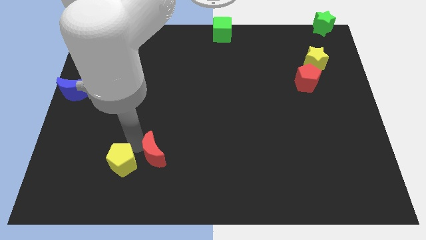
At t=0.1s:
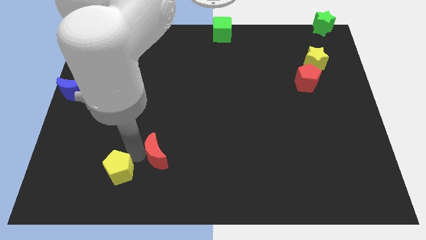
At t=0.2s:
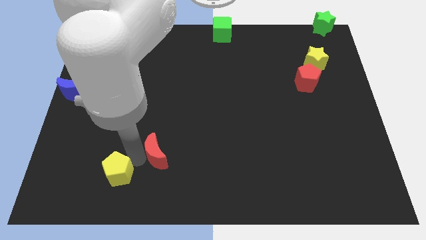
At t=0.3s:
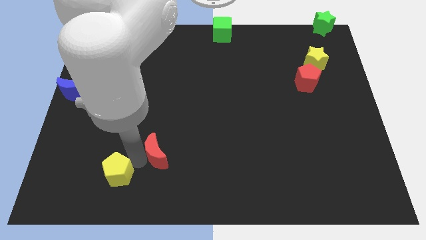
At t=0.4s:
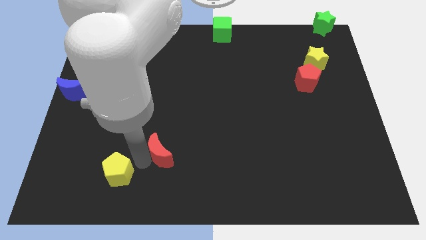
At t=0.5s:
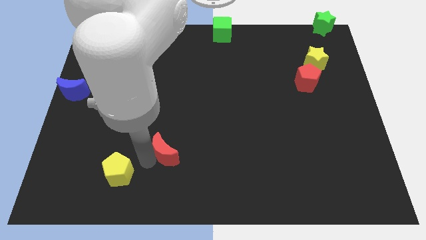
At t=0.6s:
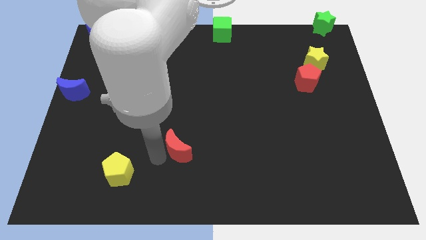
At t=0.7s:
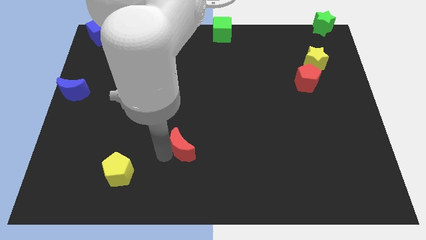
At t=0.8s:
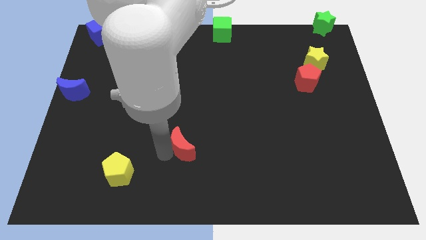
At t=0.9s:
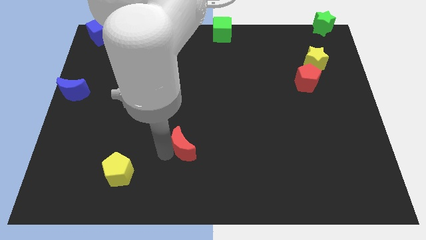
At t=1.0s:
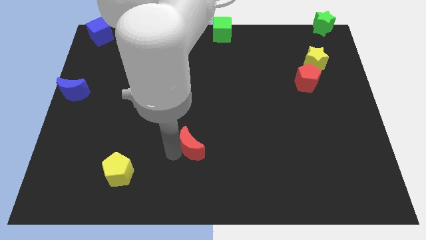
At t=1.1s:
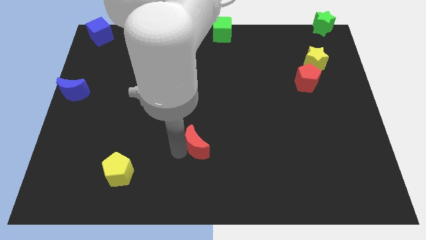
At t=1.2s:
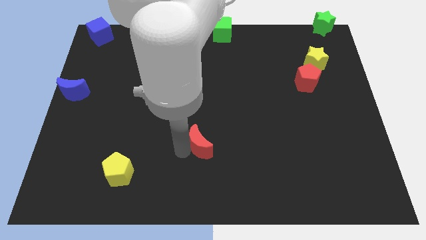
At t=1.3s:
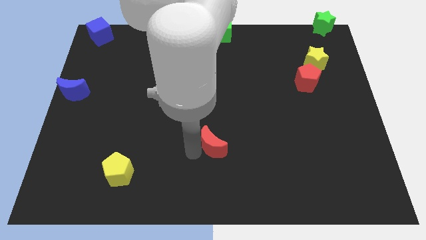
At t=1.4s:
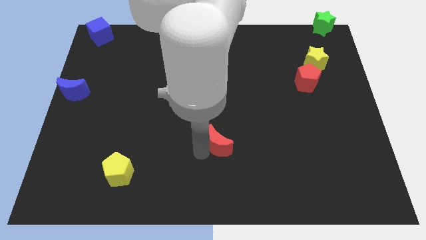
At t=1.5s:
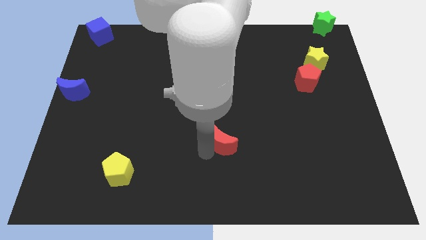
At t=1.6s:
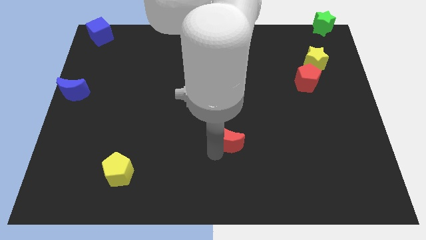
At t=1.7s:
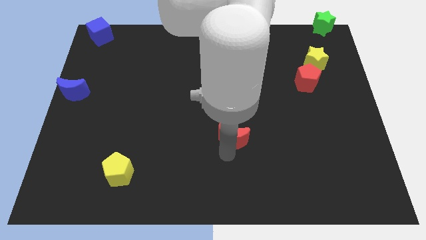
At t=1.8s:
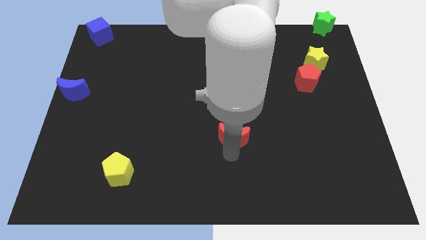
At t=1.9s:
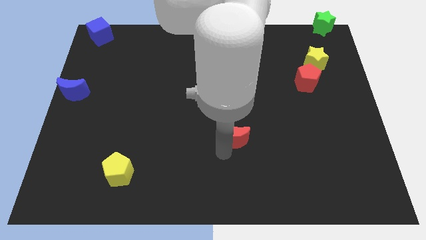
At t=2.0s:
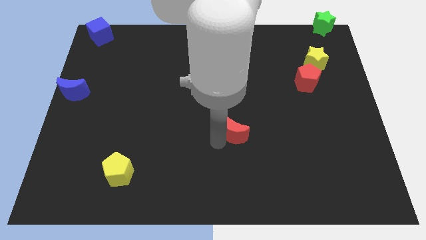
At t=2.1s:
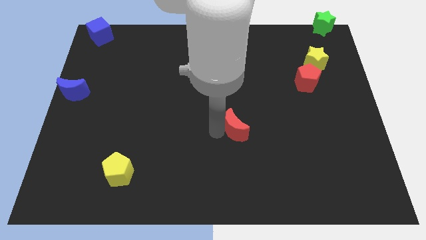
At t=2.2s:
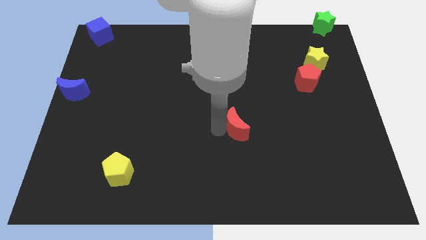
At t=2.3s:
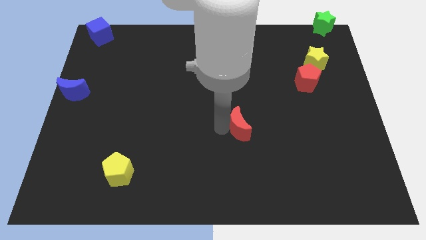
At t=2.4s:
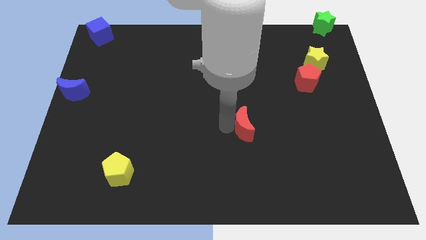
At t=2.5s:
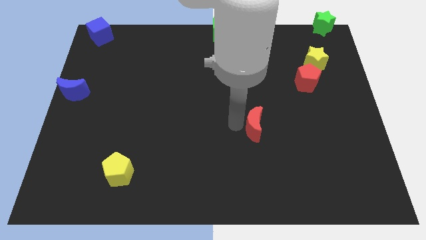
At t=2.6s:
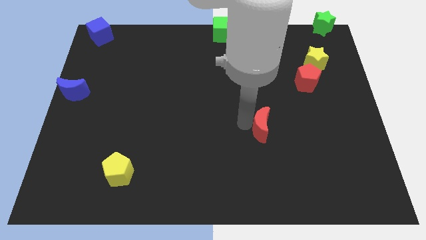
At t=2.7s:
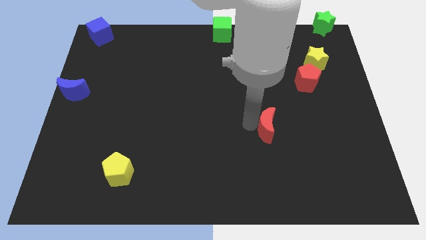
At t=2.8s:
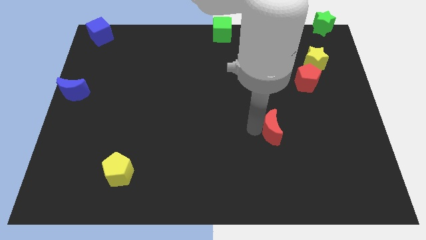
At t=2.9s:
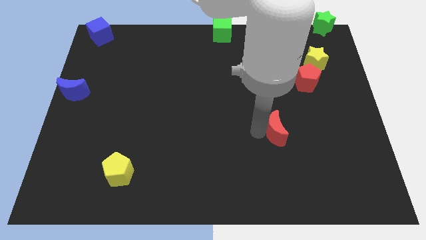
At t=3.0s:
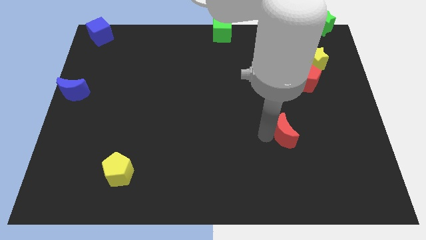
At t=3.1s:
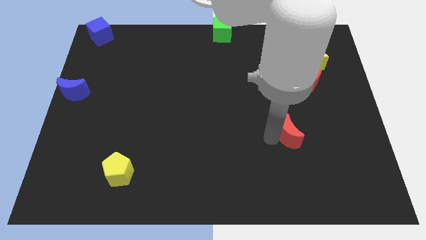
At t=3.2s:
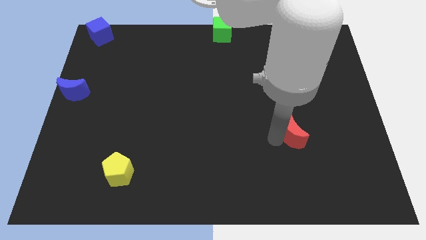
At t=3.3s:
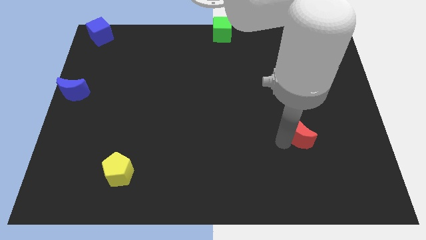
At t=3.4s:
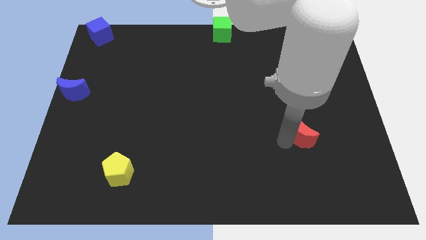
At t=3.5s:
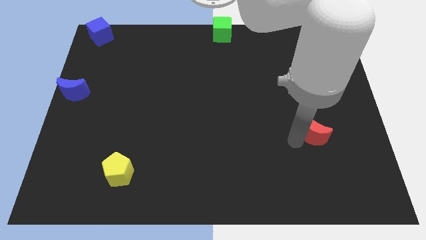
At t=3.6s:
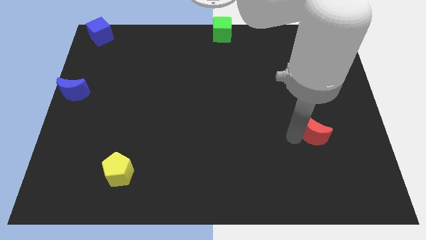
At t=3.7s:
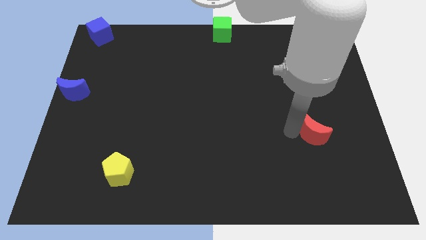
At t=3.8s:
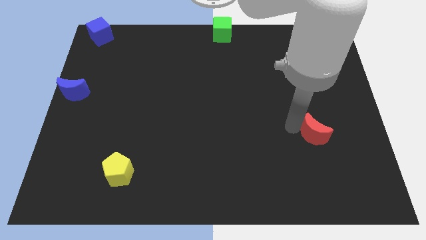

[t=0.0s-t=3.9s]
push red crescent below red pentagon

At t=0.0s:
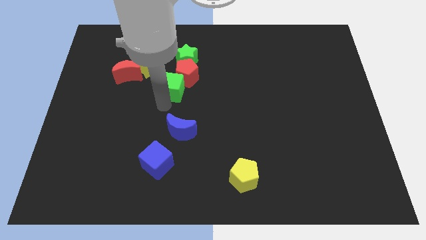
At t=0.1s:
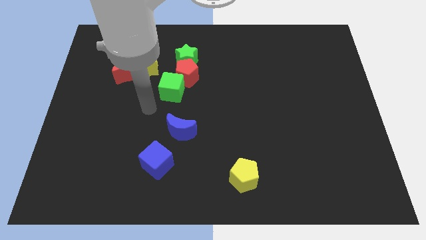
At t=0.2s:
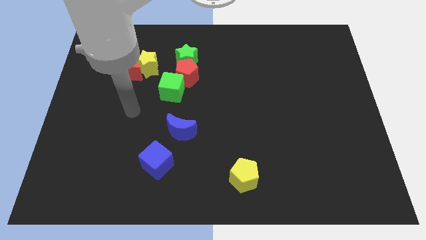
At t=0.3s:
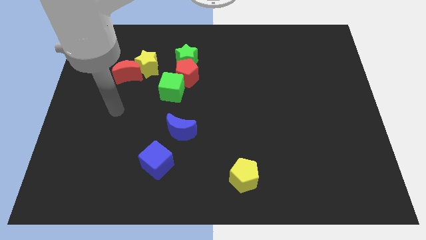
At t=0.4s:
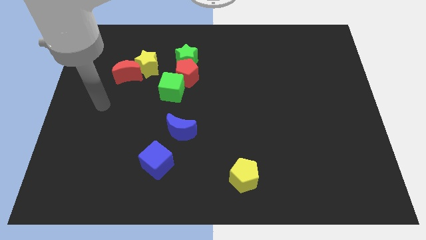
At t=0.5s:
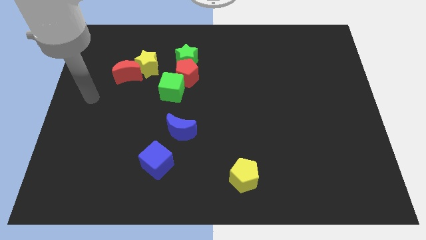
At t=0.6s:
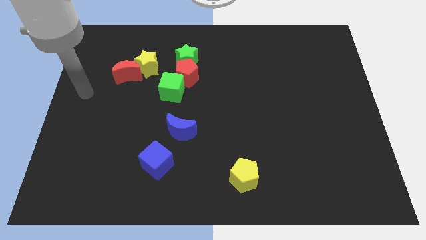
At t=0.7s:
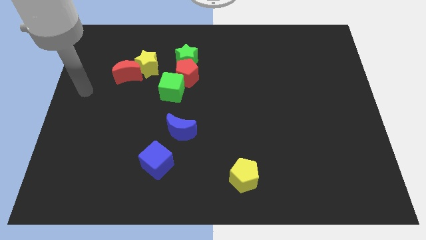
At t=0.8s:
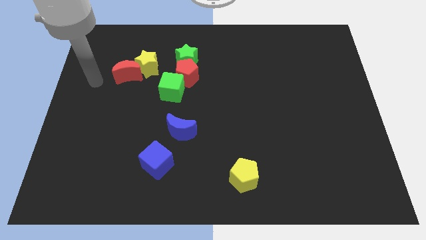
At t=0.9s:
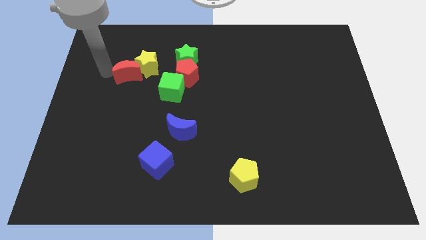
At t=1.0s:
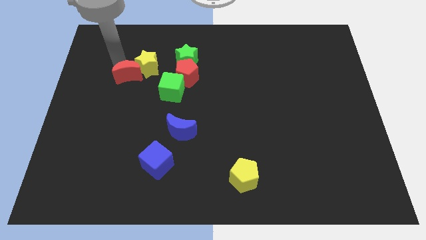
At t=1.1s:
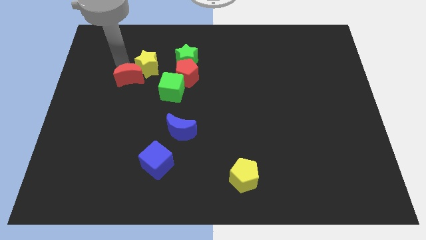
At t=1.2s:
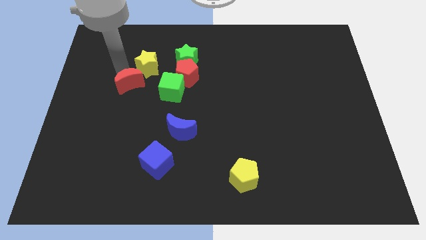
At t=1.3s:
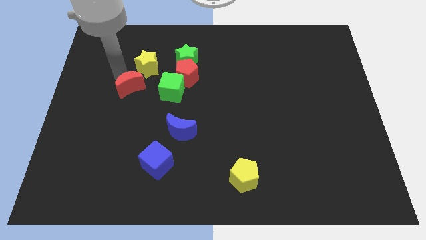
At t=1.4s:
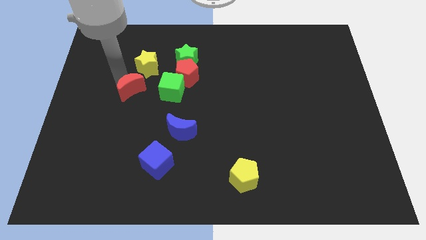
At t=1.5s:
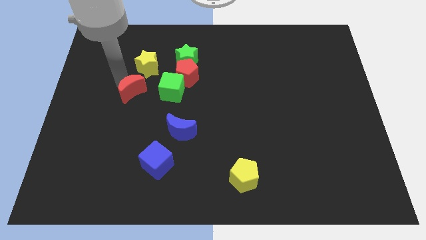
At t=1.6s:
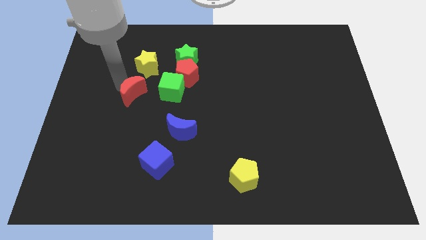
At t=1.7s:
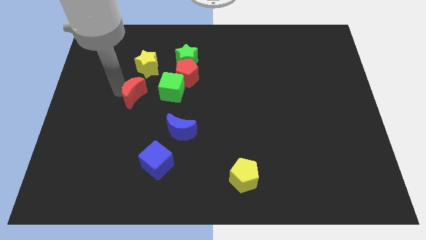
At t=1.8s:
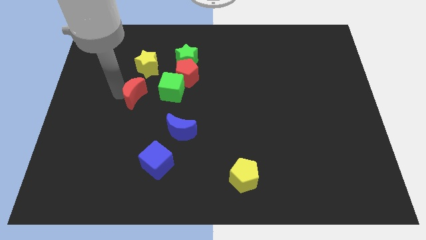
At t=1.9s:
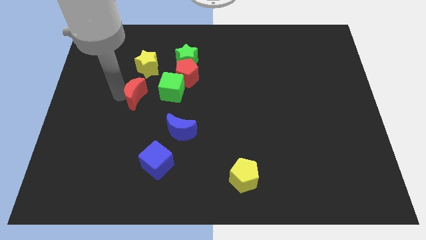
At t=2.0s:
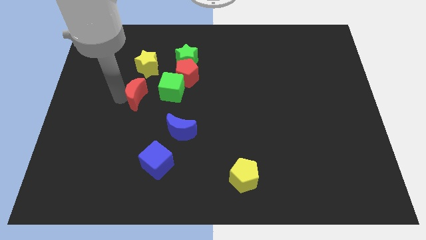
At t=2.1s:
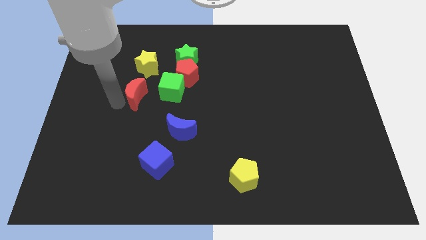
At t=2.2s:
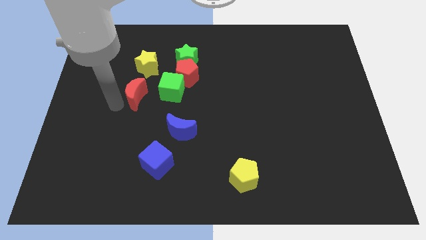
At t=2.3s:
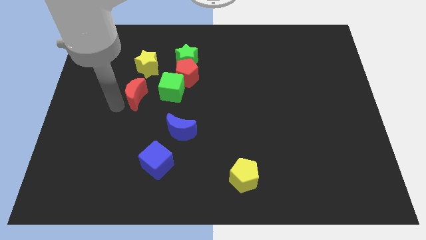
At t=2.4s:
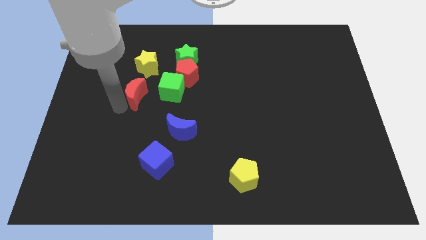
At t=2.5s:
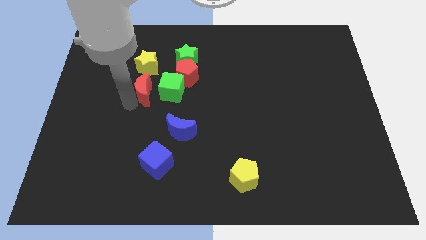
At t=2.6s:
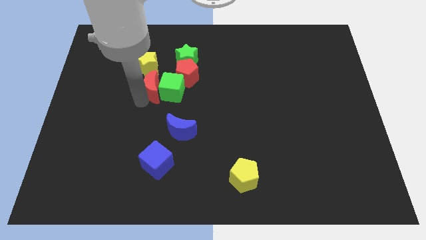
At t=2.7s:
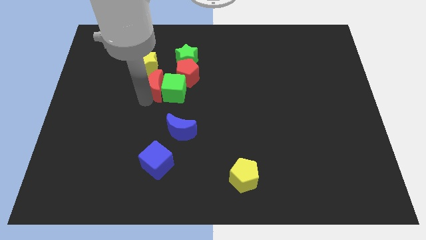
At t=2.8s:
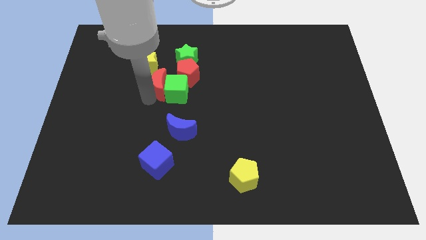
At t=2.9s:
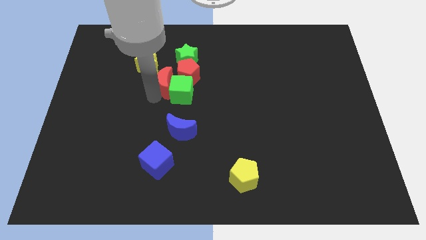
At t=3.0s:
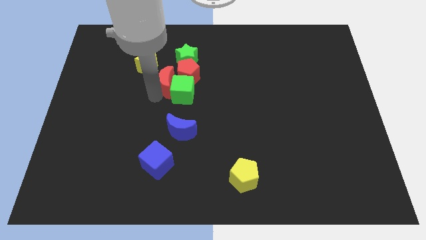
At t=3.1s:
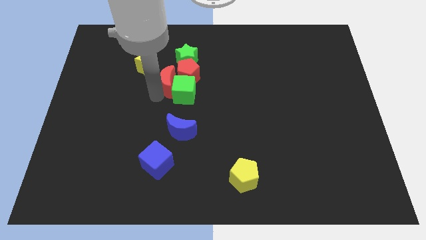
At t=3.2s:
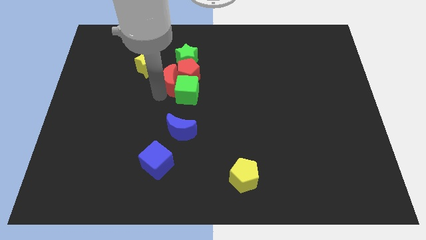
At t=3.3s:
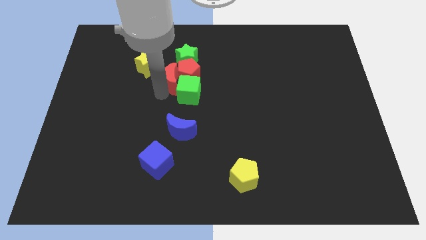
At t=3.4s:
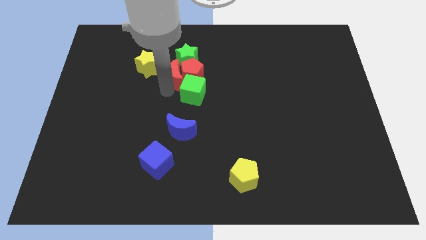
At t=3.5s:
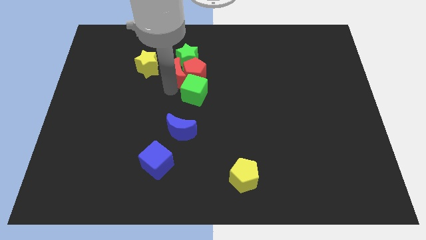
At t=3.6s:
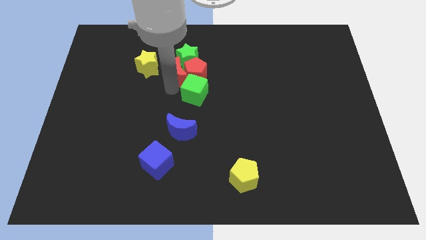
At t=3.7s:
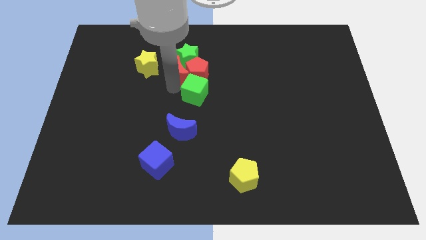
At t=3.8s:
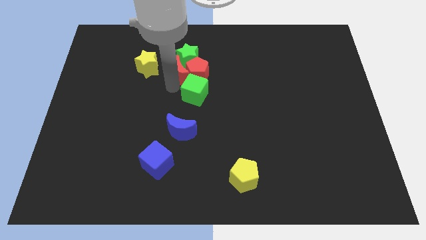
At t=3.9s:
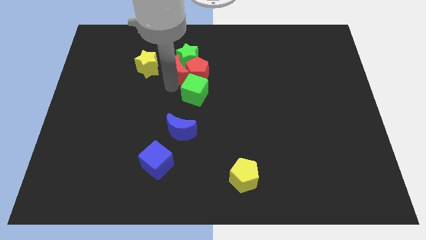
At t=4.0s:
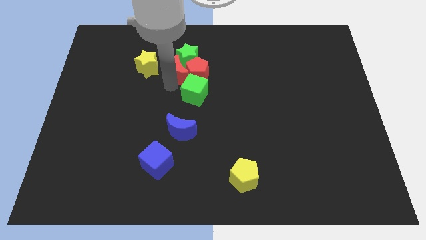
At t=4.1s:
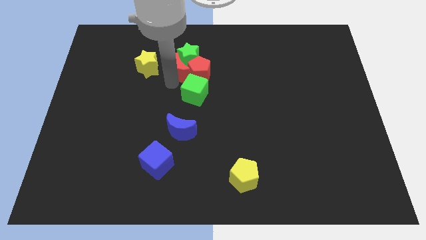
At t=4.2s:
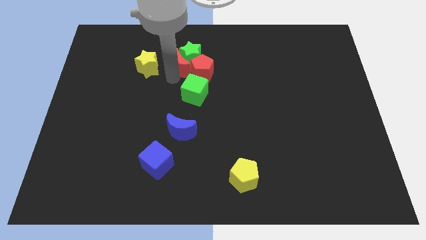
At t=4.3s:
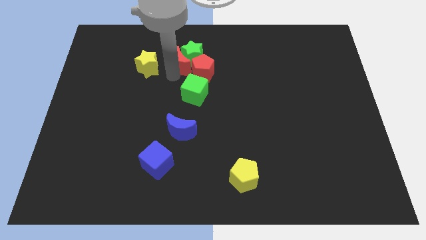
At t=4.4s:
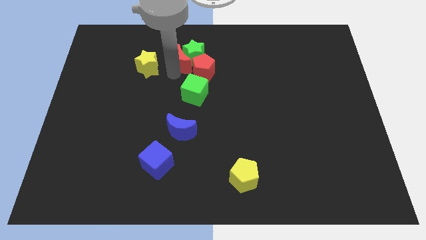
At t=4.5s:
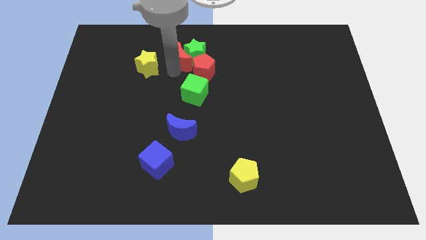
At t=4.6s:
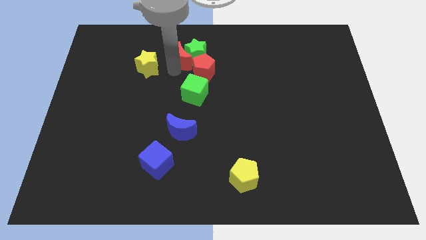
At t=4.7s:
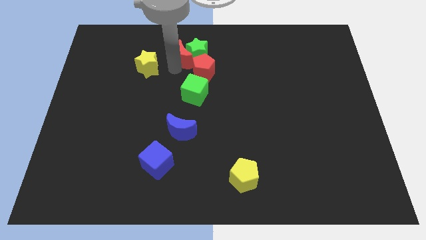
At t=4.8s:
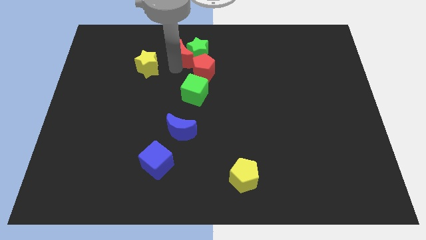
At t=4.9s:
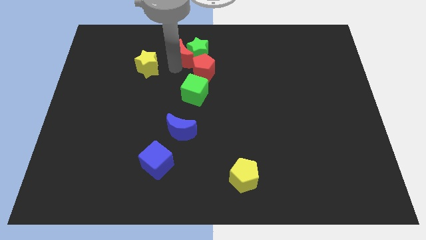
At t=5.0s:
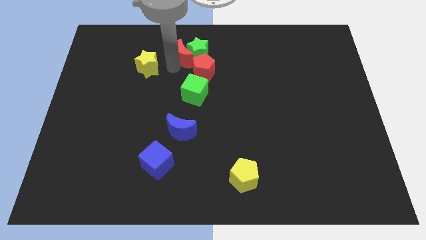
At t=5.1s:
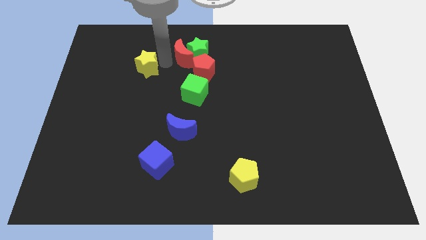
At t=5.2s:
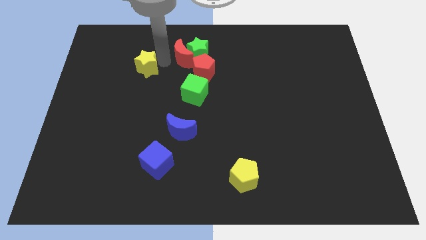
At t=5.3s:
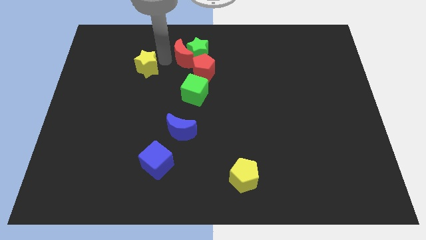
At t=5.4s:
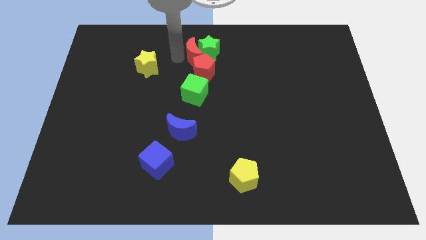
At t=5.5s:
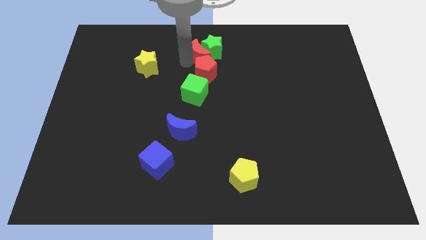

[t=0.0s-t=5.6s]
move the red moon at the left side of the green star
